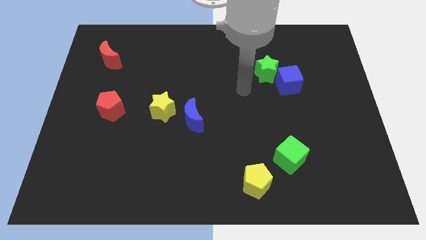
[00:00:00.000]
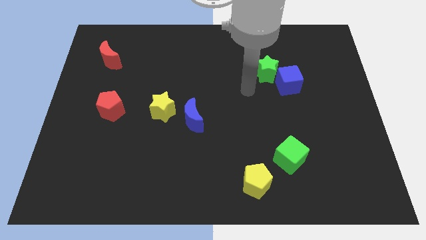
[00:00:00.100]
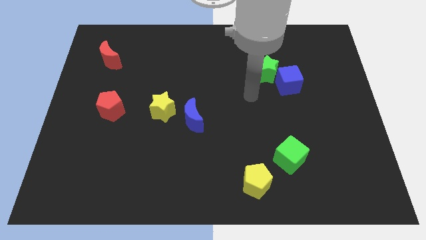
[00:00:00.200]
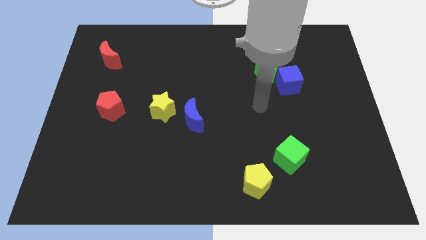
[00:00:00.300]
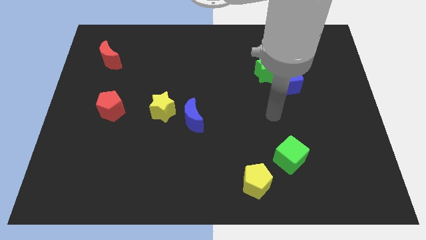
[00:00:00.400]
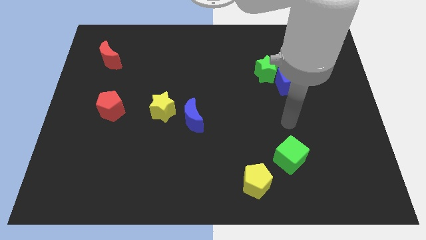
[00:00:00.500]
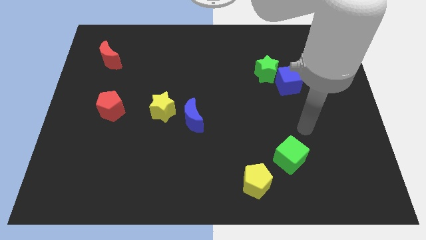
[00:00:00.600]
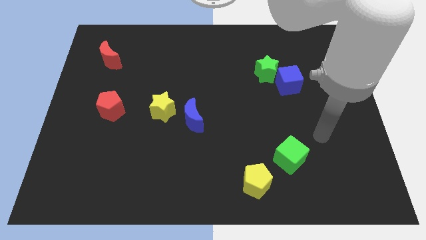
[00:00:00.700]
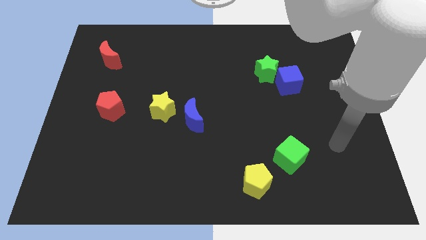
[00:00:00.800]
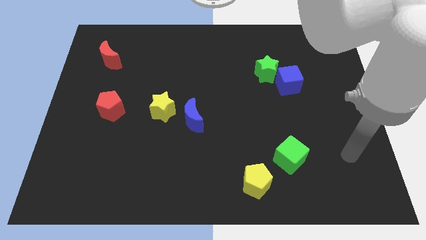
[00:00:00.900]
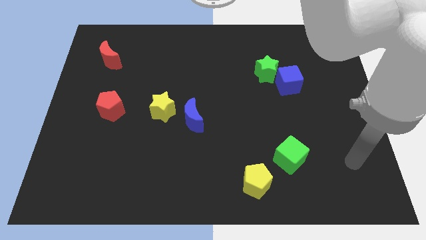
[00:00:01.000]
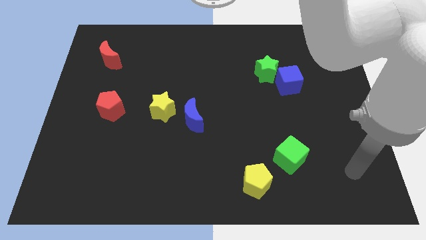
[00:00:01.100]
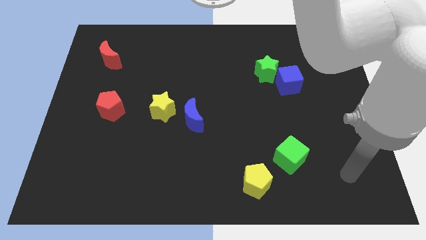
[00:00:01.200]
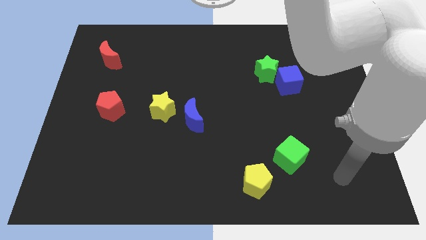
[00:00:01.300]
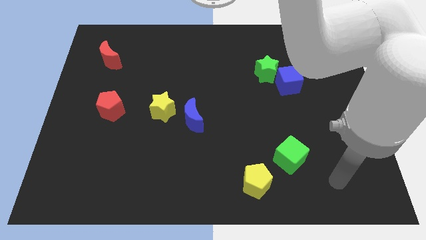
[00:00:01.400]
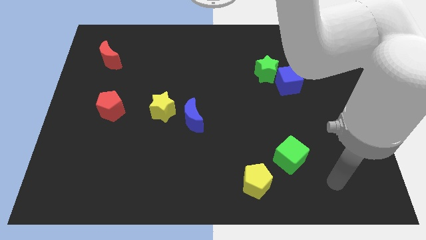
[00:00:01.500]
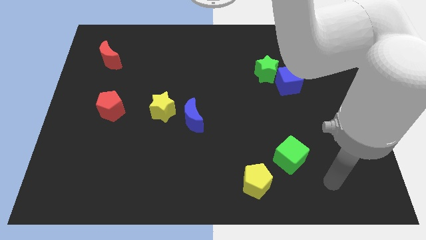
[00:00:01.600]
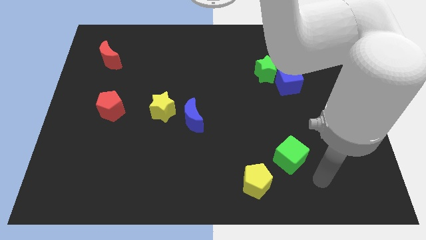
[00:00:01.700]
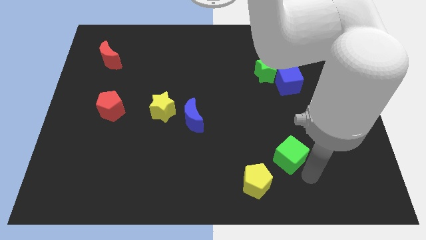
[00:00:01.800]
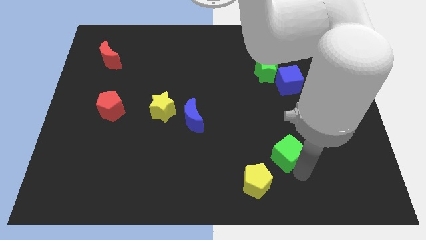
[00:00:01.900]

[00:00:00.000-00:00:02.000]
drag your arm to towards green cube

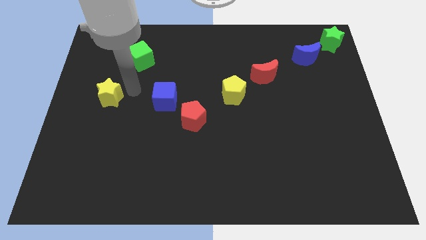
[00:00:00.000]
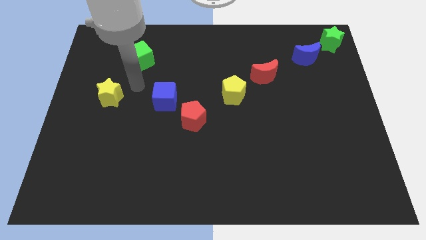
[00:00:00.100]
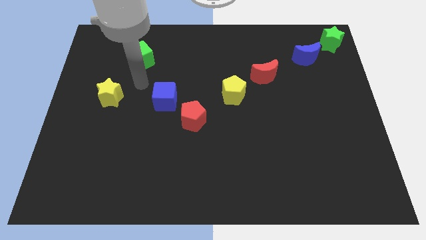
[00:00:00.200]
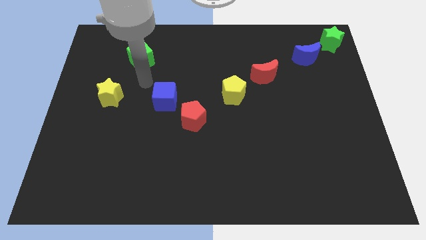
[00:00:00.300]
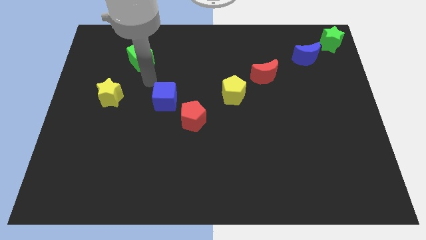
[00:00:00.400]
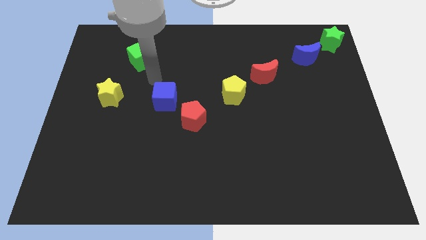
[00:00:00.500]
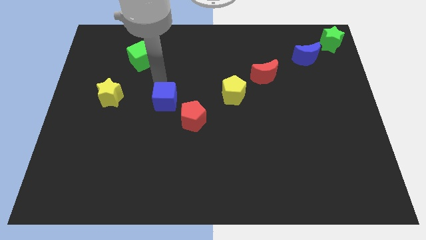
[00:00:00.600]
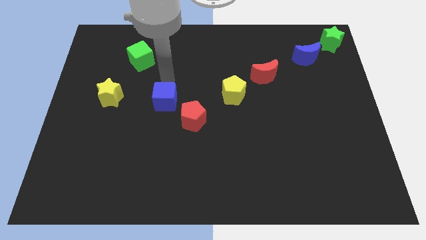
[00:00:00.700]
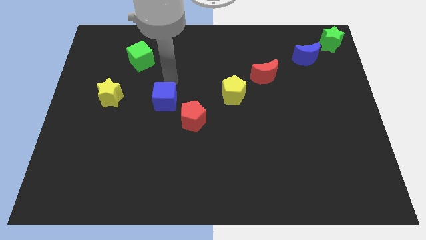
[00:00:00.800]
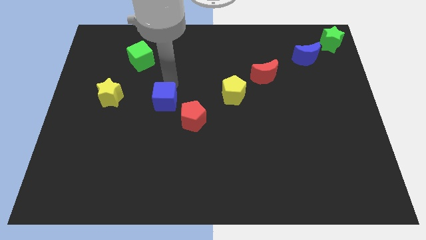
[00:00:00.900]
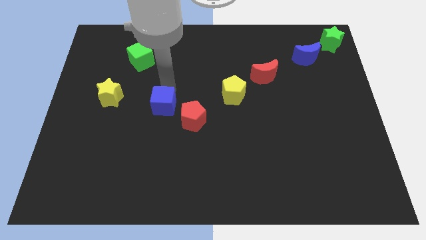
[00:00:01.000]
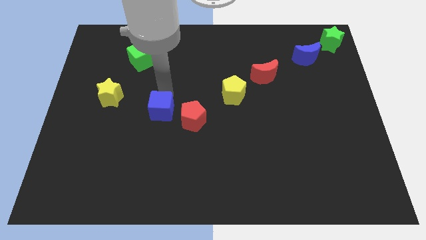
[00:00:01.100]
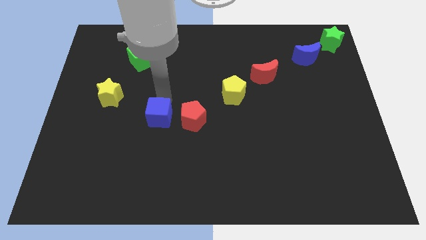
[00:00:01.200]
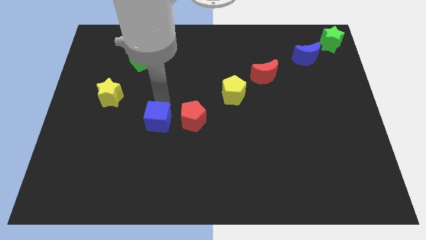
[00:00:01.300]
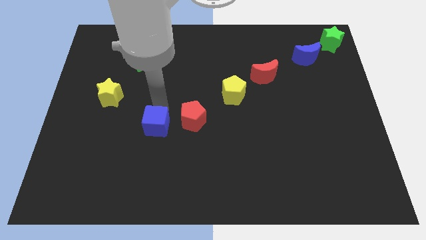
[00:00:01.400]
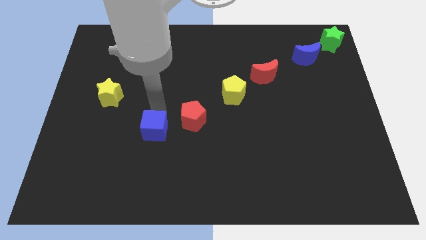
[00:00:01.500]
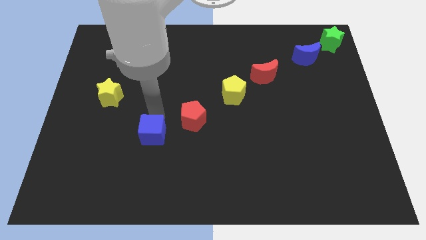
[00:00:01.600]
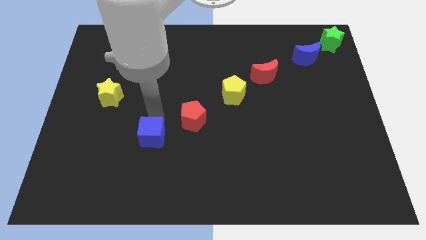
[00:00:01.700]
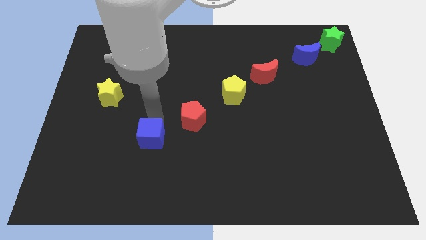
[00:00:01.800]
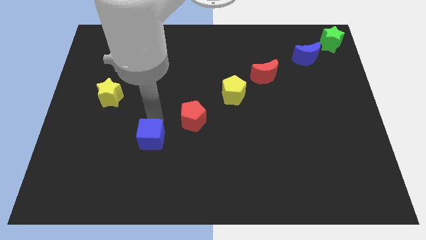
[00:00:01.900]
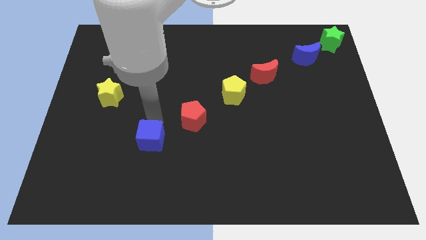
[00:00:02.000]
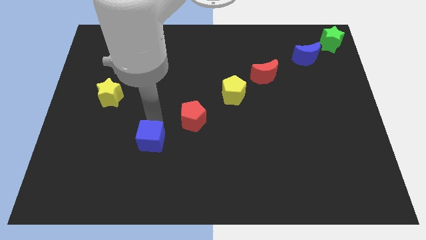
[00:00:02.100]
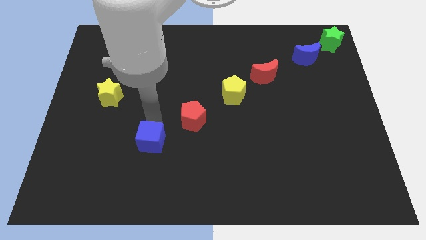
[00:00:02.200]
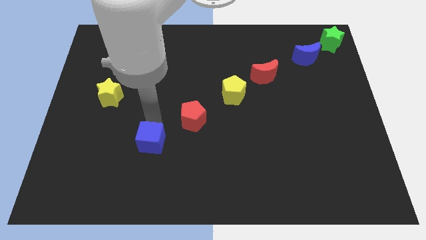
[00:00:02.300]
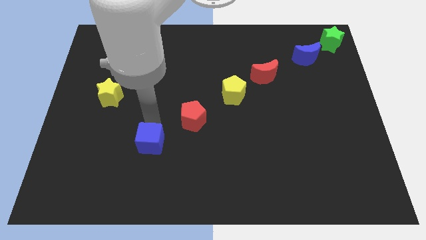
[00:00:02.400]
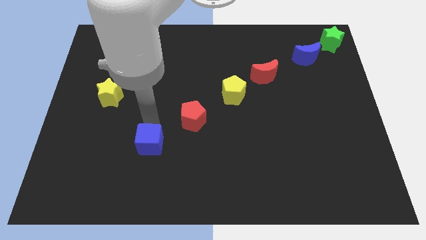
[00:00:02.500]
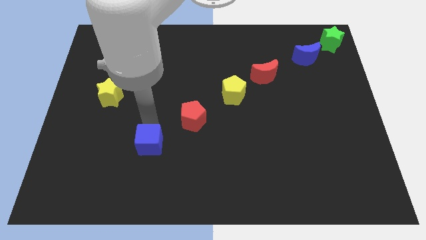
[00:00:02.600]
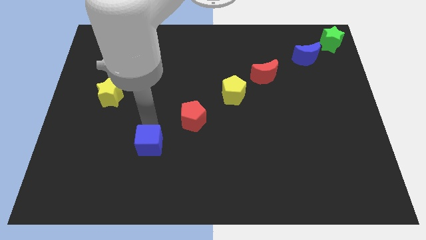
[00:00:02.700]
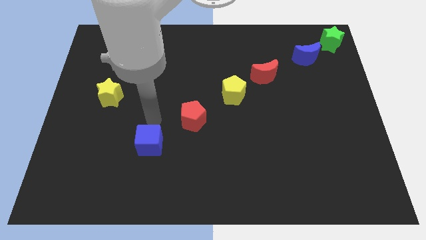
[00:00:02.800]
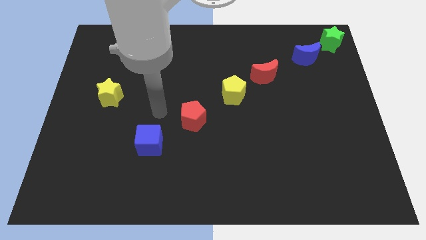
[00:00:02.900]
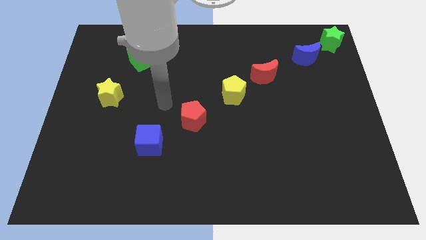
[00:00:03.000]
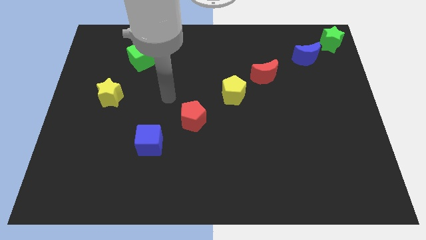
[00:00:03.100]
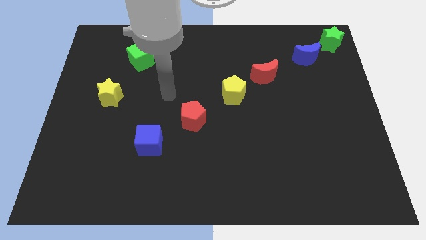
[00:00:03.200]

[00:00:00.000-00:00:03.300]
push the blue cube towards the bottom of the red pentagon

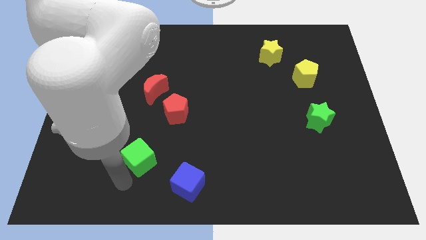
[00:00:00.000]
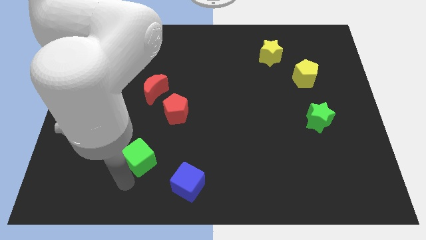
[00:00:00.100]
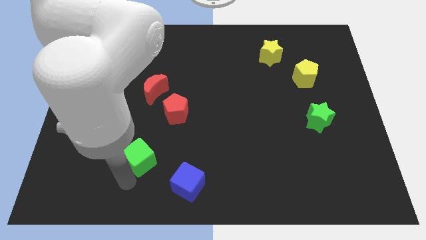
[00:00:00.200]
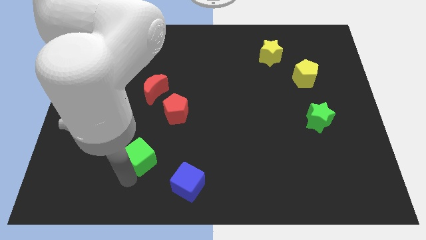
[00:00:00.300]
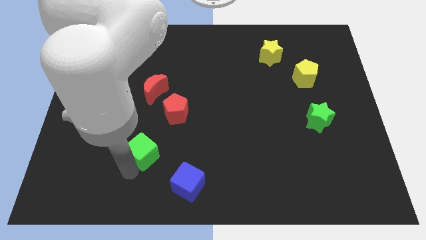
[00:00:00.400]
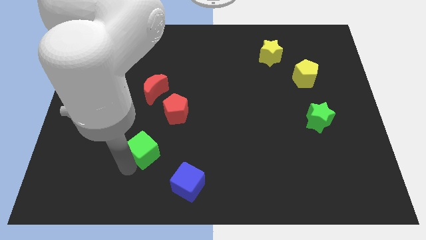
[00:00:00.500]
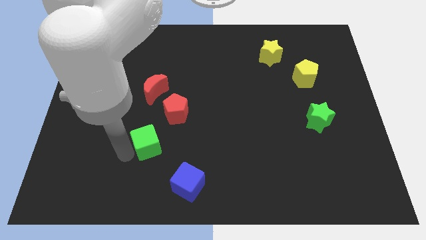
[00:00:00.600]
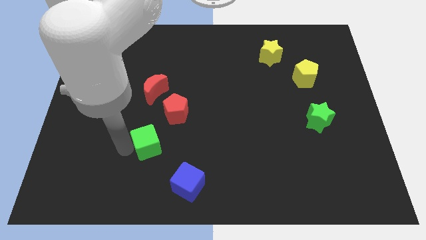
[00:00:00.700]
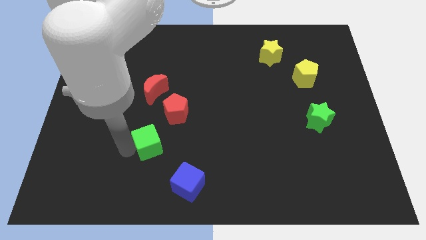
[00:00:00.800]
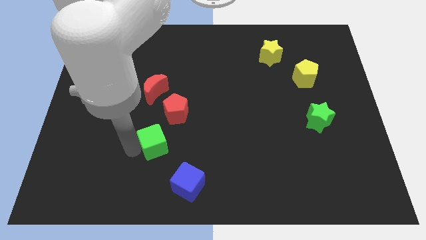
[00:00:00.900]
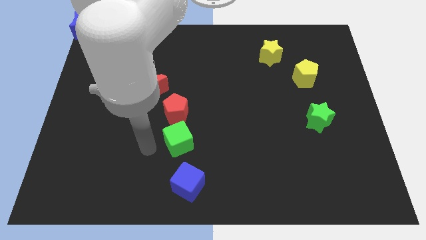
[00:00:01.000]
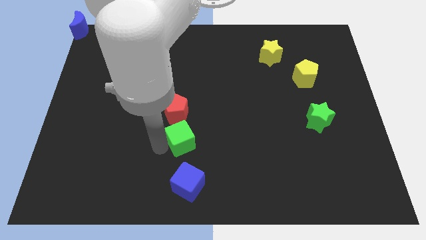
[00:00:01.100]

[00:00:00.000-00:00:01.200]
place the green cube in between the red pentagon and the blue cube

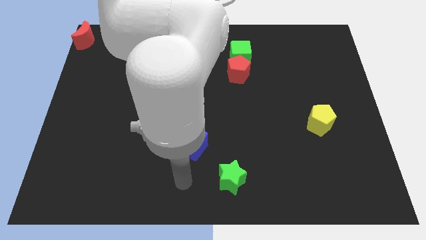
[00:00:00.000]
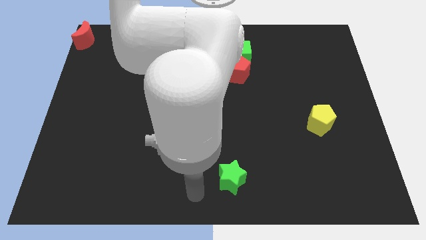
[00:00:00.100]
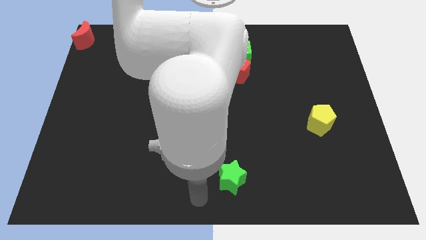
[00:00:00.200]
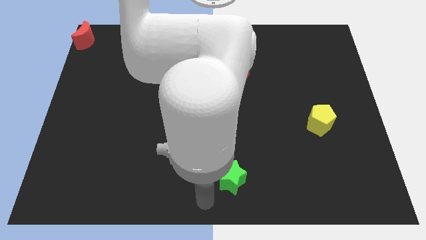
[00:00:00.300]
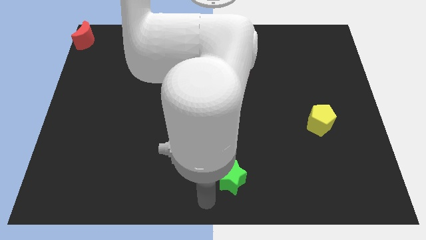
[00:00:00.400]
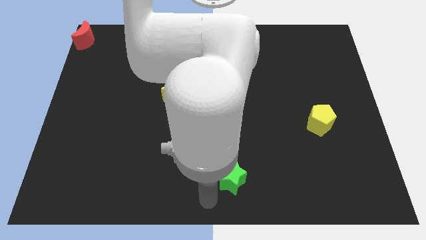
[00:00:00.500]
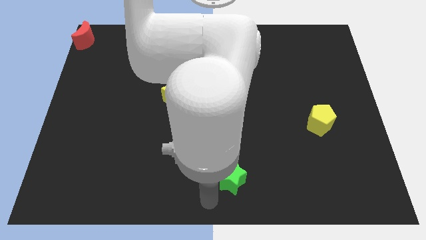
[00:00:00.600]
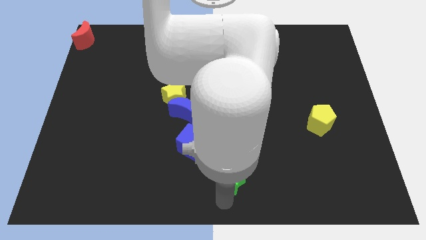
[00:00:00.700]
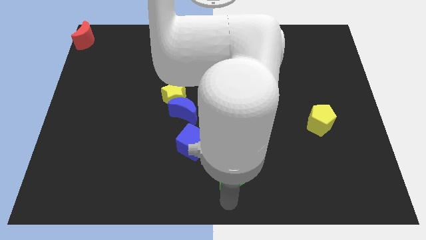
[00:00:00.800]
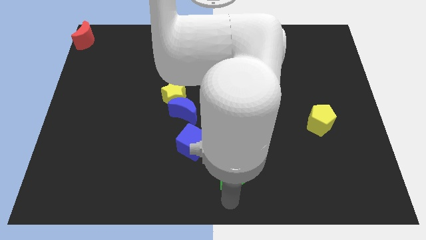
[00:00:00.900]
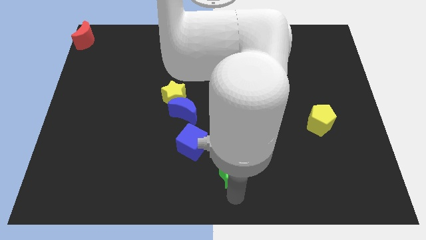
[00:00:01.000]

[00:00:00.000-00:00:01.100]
point your arm at the bottom of green star

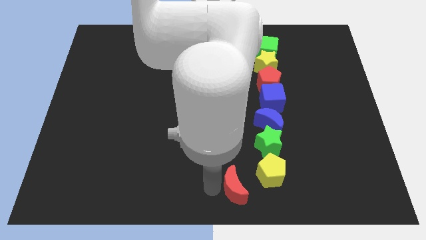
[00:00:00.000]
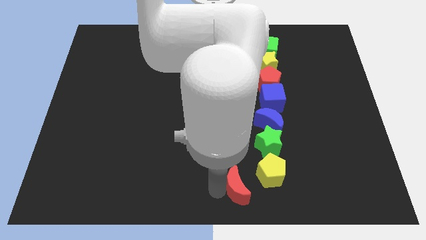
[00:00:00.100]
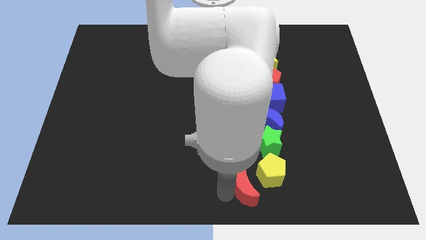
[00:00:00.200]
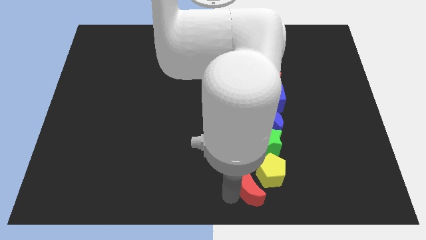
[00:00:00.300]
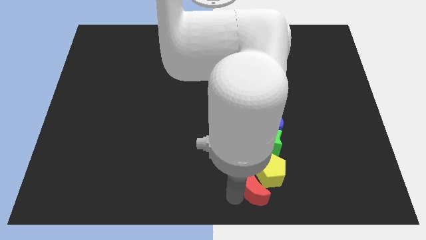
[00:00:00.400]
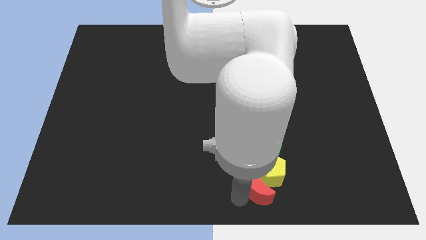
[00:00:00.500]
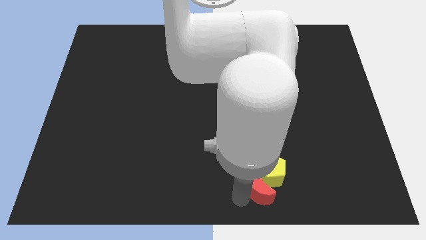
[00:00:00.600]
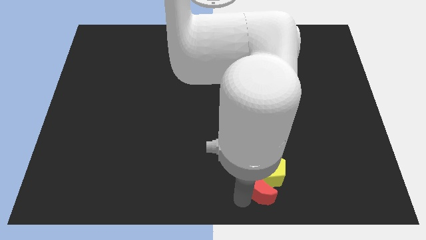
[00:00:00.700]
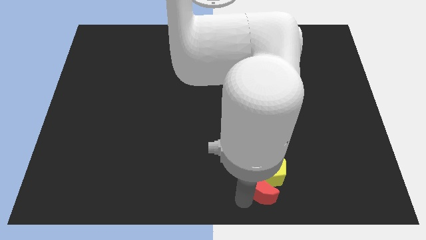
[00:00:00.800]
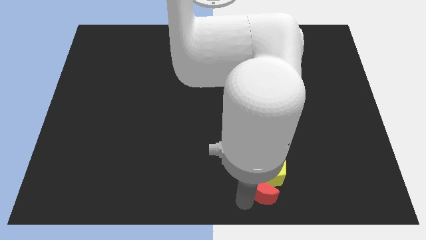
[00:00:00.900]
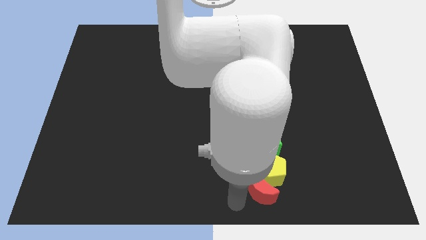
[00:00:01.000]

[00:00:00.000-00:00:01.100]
place red moon below yellow pentagon

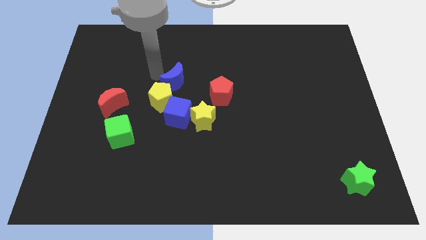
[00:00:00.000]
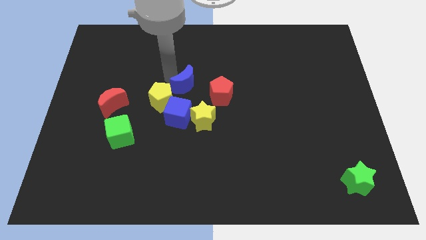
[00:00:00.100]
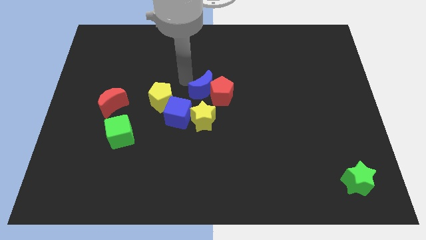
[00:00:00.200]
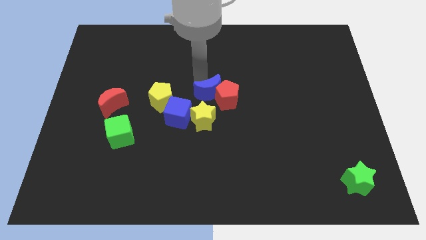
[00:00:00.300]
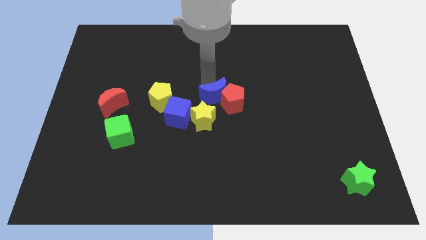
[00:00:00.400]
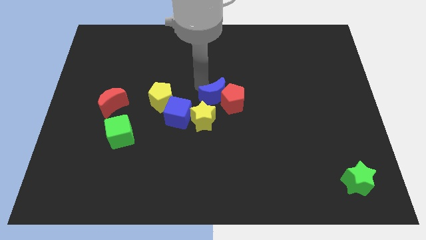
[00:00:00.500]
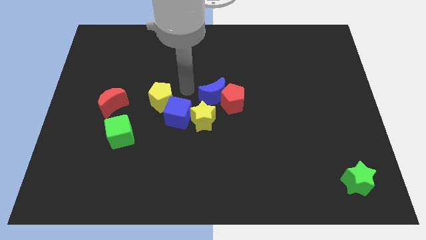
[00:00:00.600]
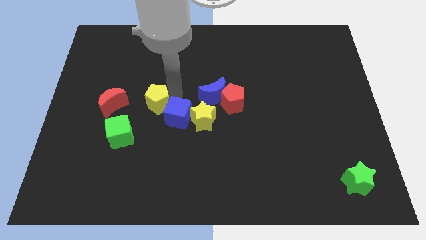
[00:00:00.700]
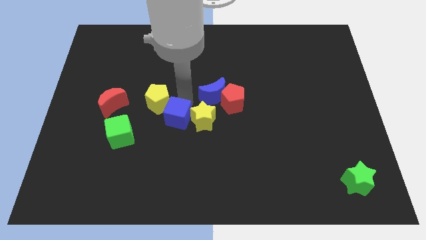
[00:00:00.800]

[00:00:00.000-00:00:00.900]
push the blue crescent into the red pentagon
